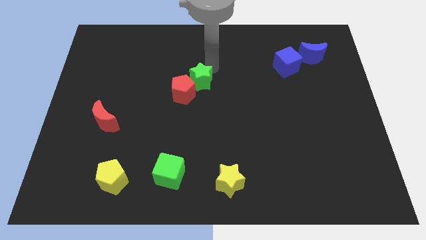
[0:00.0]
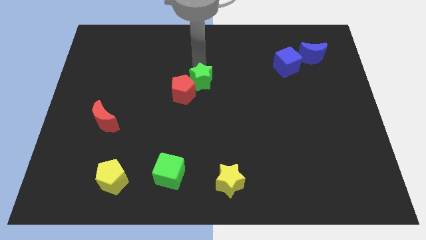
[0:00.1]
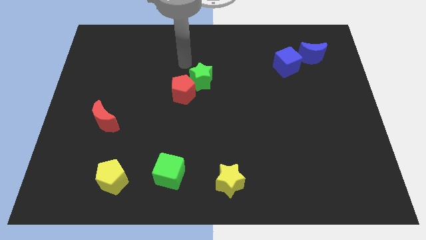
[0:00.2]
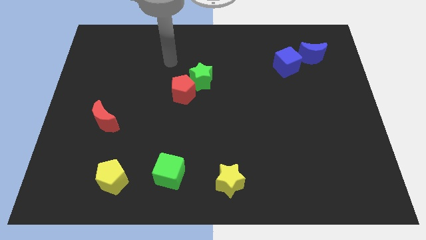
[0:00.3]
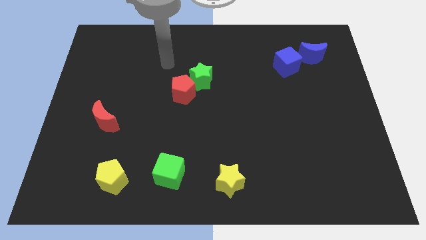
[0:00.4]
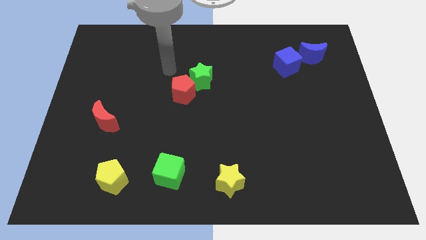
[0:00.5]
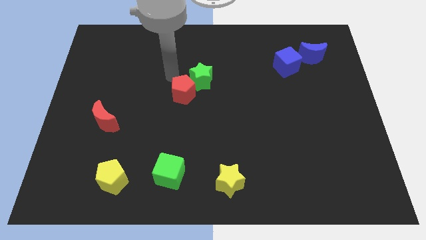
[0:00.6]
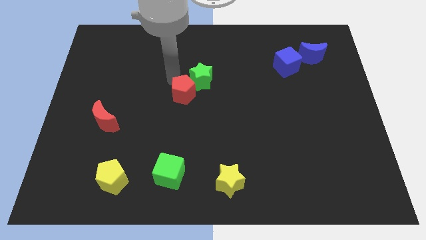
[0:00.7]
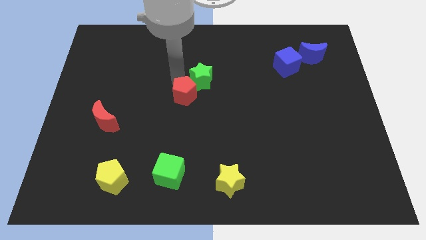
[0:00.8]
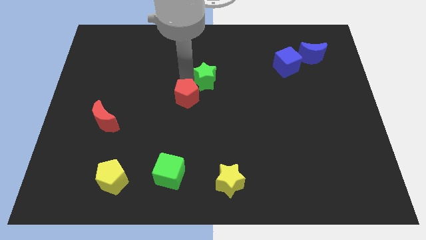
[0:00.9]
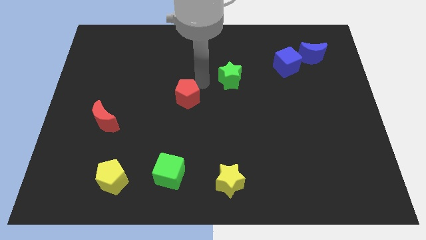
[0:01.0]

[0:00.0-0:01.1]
separate green star and red pentagon

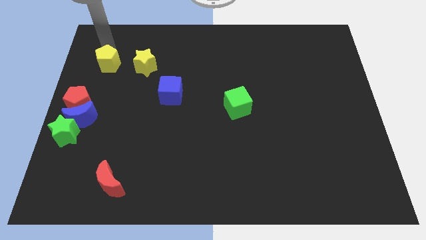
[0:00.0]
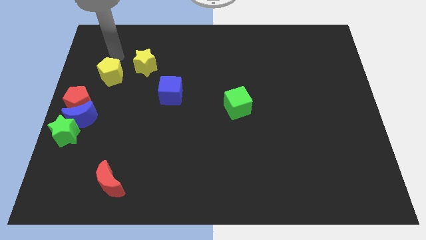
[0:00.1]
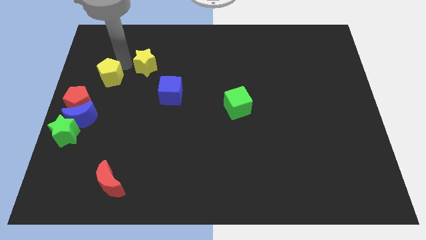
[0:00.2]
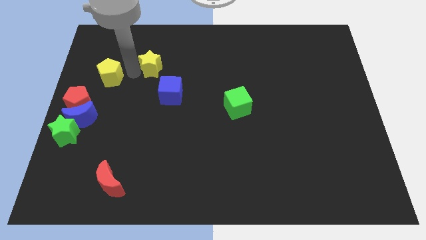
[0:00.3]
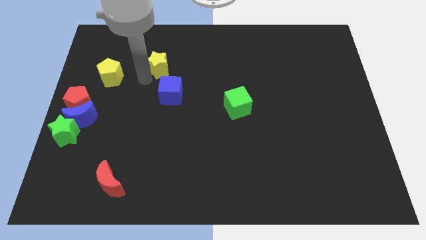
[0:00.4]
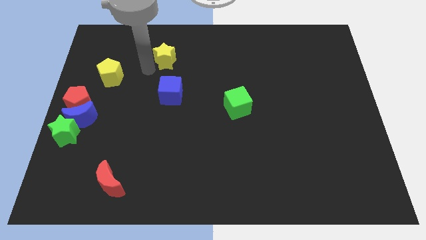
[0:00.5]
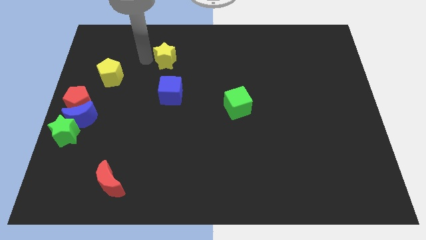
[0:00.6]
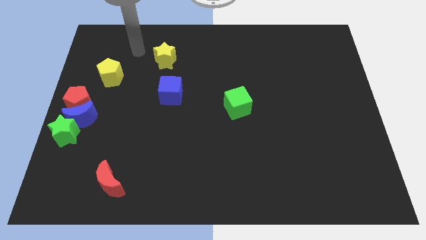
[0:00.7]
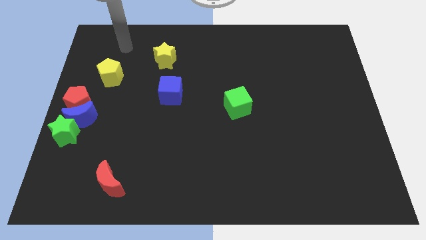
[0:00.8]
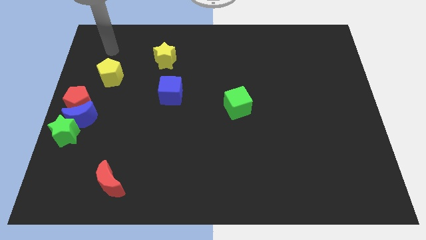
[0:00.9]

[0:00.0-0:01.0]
separate the yellow star and the yellow pentagon

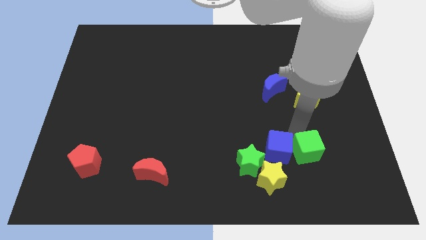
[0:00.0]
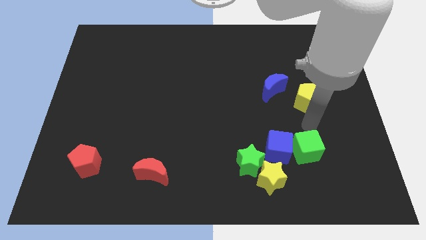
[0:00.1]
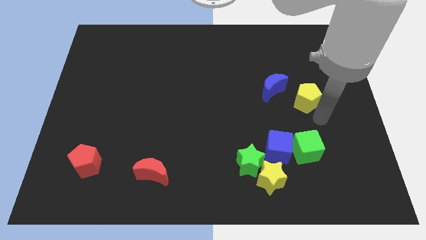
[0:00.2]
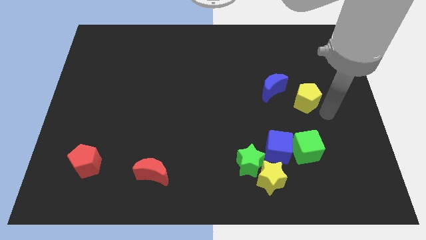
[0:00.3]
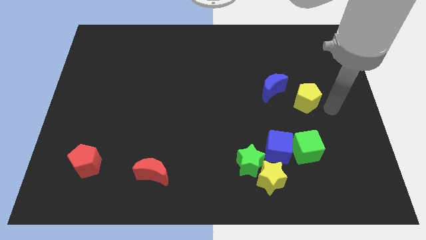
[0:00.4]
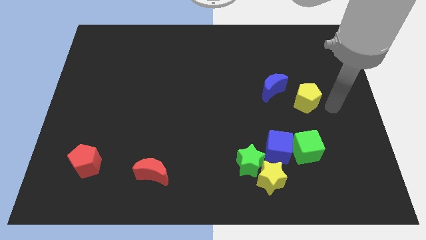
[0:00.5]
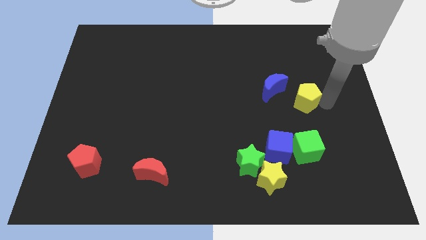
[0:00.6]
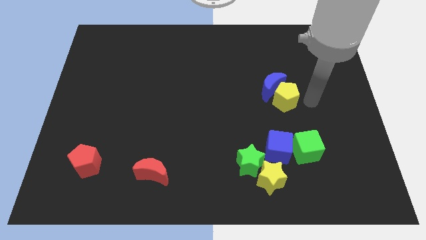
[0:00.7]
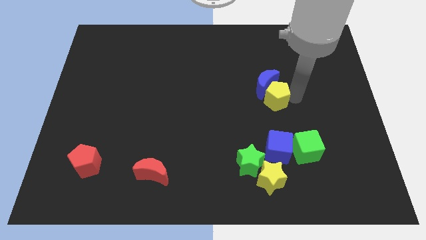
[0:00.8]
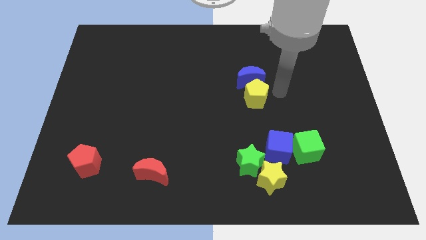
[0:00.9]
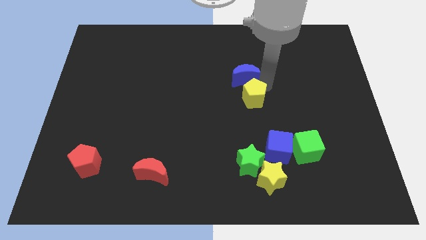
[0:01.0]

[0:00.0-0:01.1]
push the yellow pentagon into the blue moon

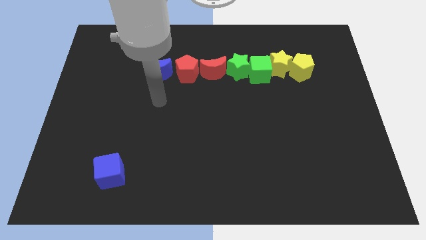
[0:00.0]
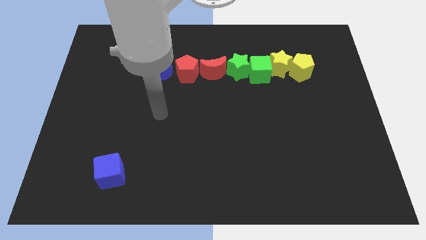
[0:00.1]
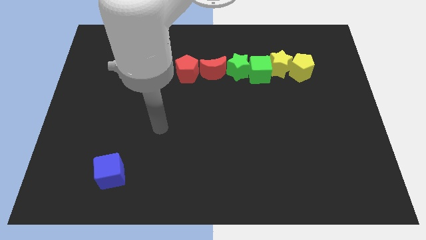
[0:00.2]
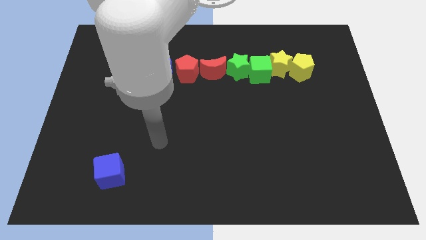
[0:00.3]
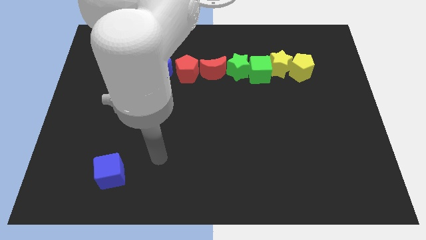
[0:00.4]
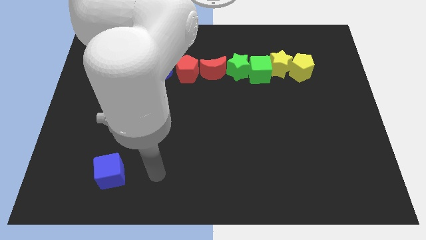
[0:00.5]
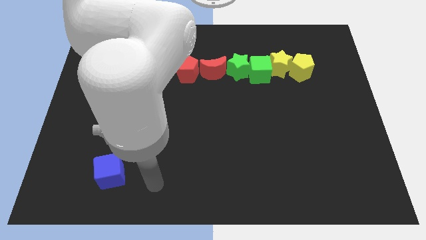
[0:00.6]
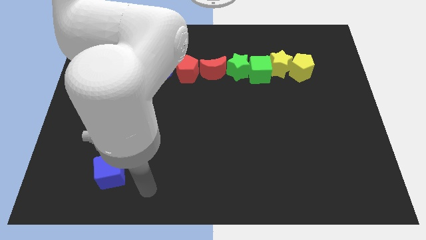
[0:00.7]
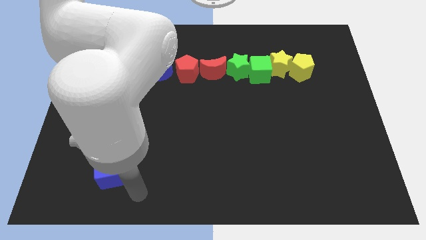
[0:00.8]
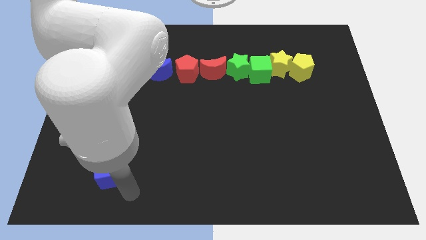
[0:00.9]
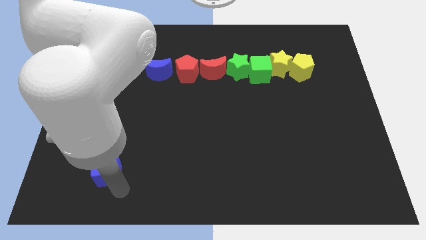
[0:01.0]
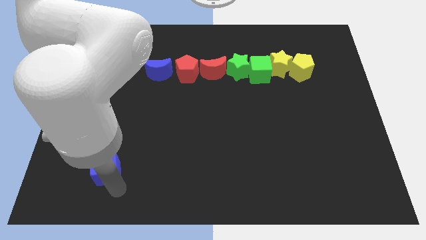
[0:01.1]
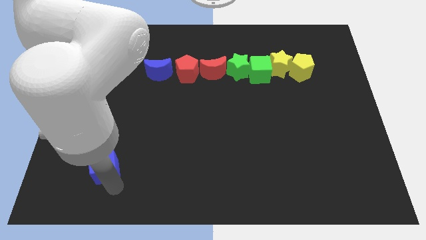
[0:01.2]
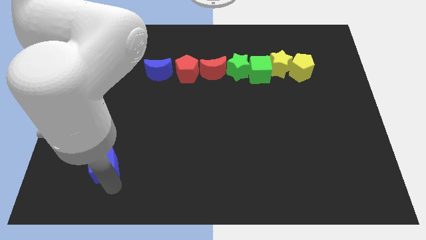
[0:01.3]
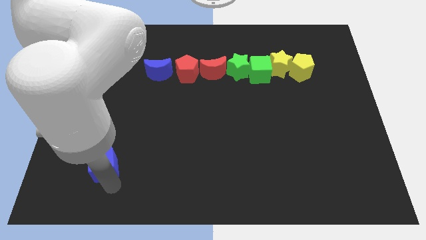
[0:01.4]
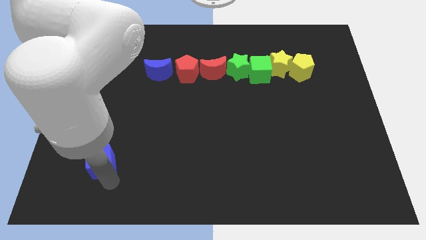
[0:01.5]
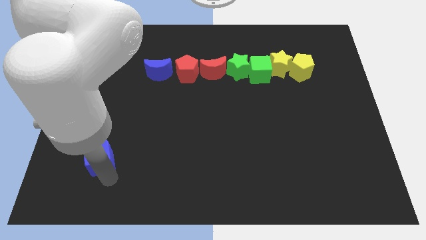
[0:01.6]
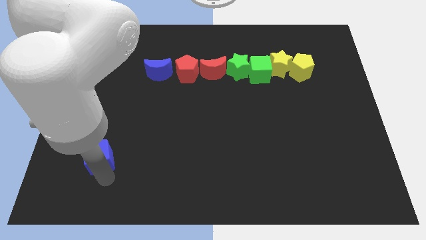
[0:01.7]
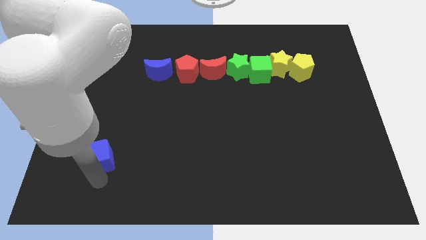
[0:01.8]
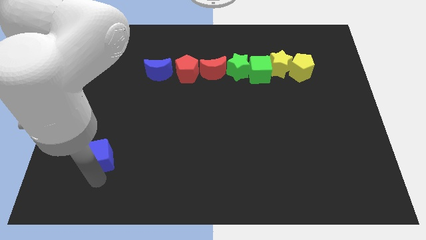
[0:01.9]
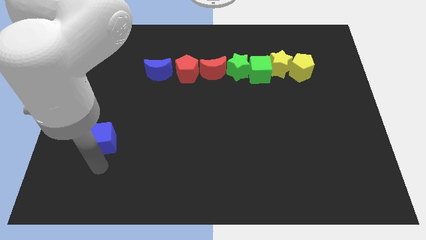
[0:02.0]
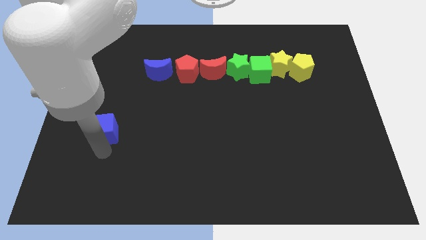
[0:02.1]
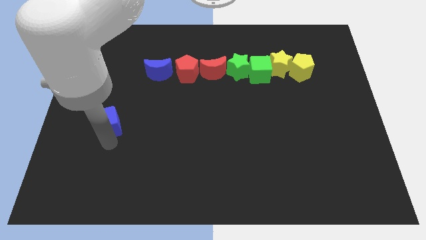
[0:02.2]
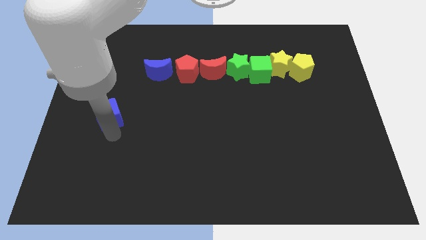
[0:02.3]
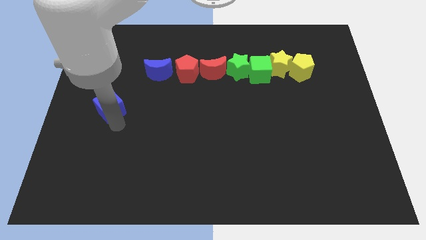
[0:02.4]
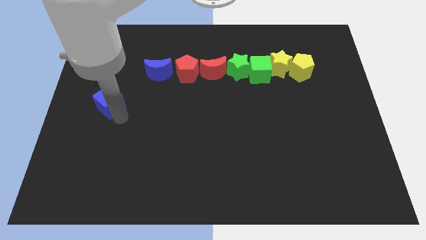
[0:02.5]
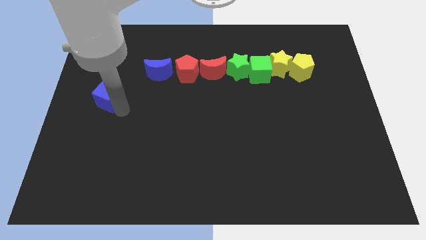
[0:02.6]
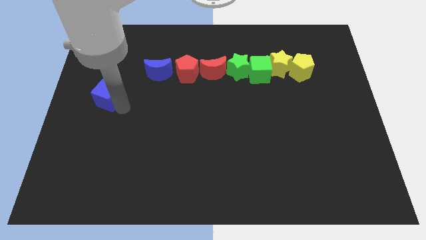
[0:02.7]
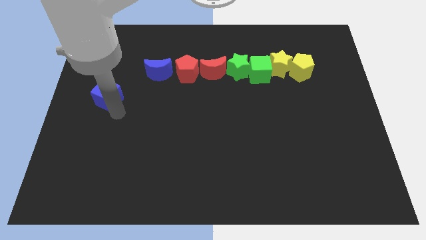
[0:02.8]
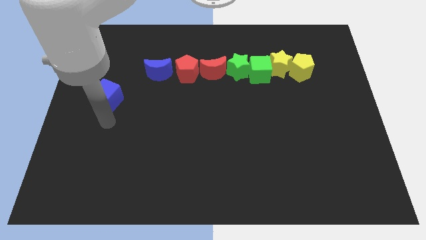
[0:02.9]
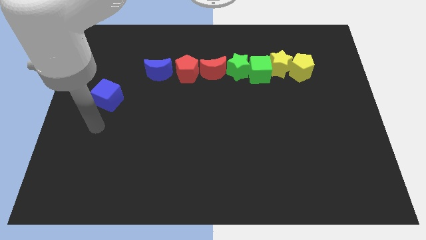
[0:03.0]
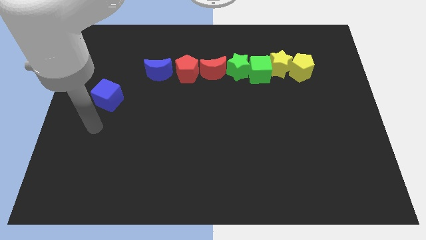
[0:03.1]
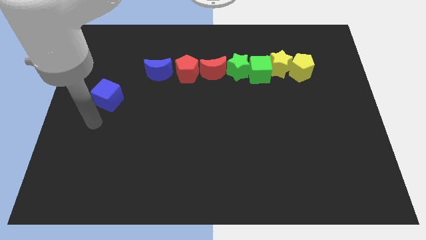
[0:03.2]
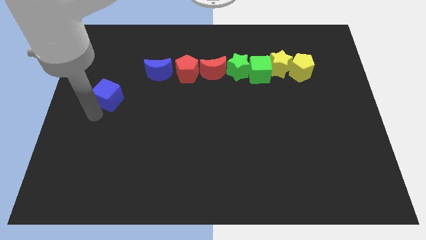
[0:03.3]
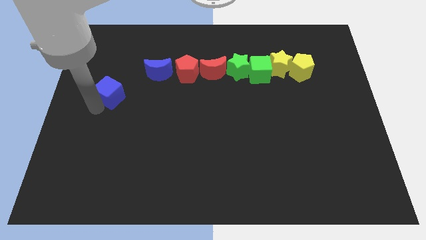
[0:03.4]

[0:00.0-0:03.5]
move the blue cube towards the left side of the blue cube

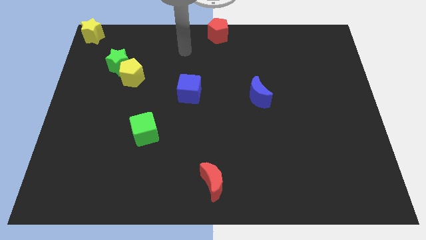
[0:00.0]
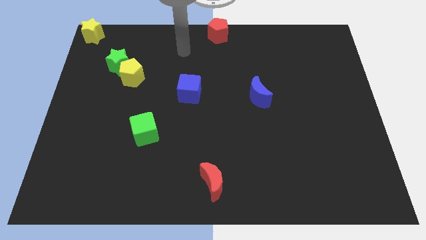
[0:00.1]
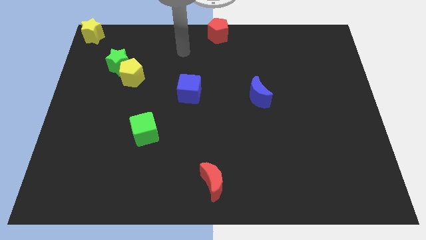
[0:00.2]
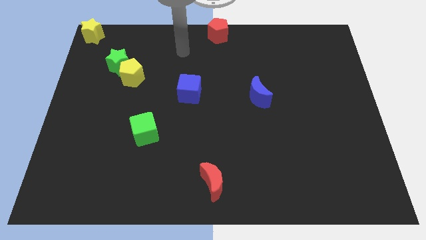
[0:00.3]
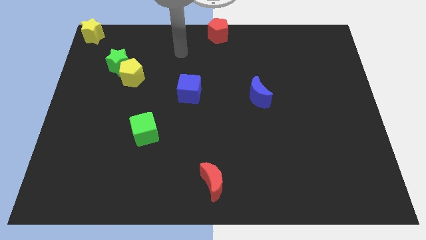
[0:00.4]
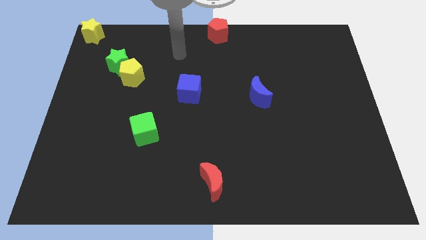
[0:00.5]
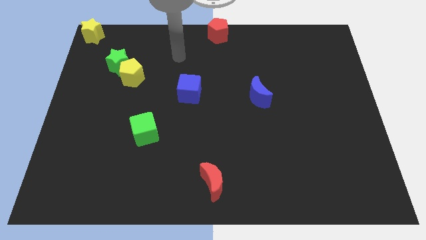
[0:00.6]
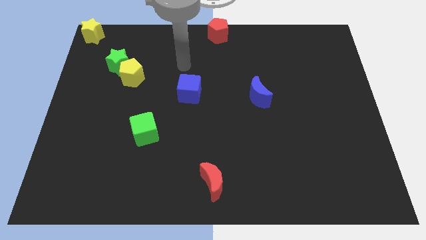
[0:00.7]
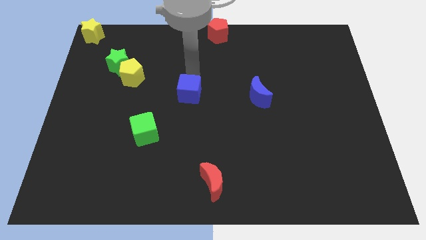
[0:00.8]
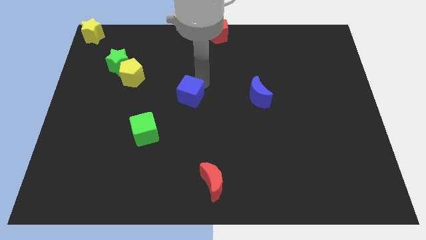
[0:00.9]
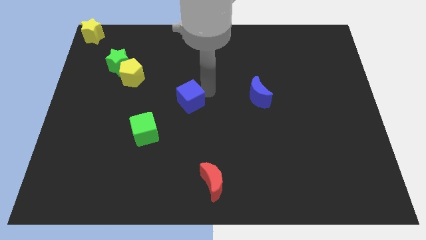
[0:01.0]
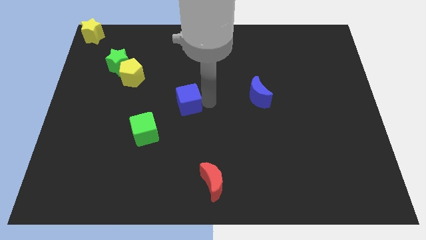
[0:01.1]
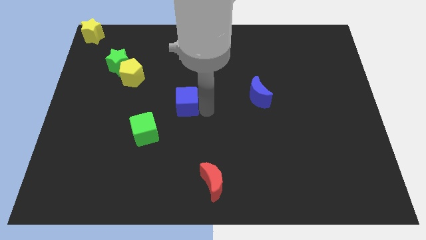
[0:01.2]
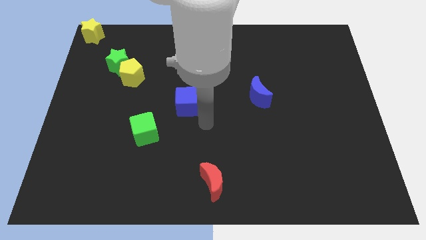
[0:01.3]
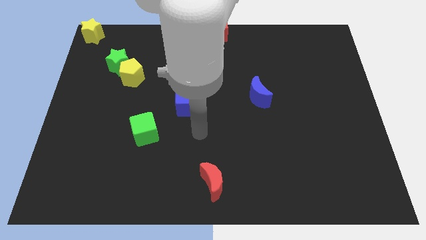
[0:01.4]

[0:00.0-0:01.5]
push the blue cube towards the green cube

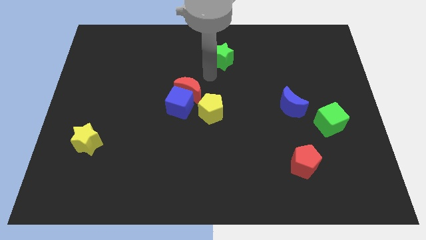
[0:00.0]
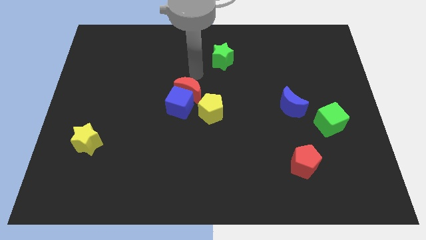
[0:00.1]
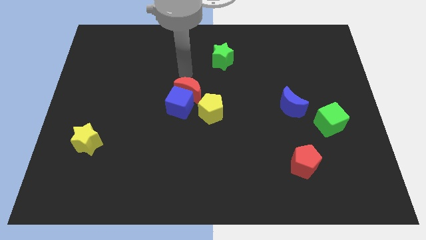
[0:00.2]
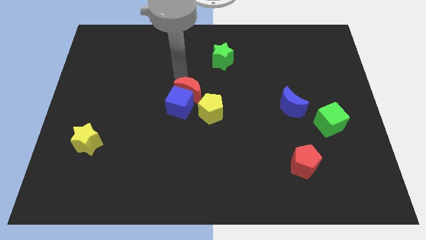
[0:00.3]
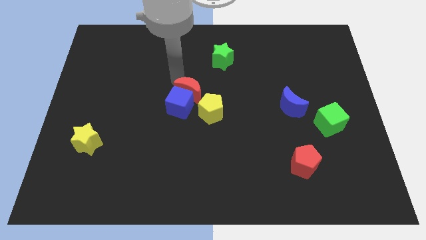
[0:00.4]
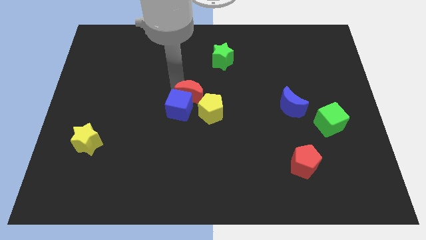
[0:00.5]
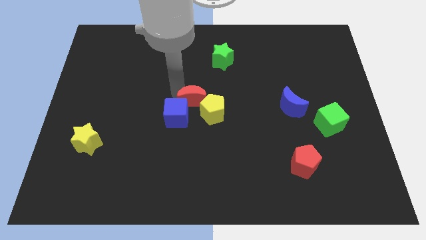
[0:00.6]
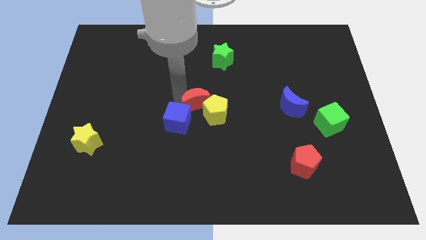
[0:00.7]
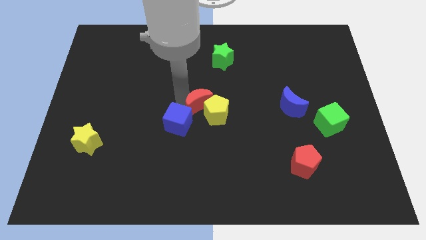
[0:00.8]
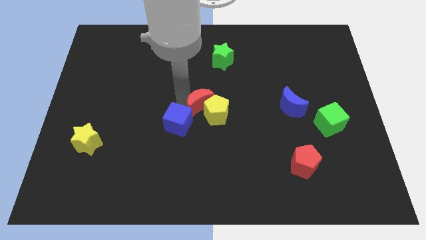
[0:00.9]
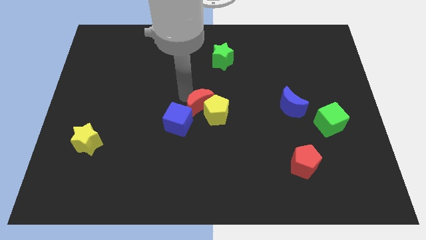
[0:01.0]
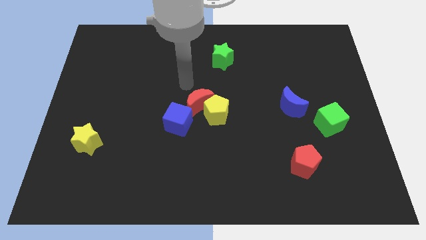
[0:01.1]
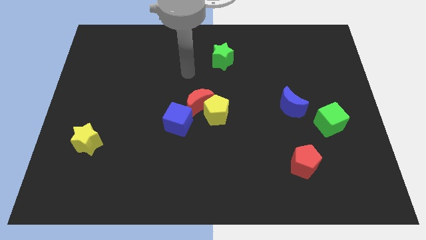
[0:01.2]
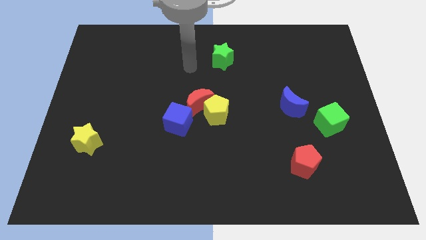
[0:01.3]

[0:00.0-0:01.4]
slightly push down the blue cube and red crescent
